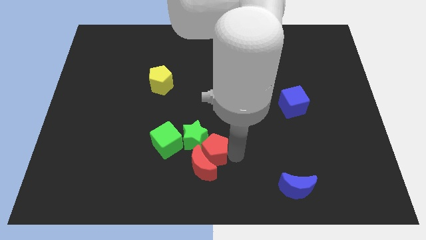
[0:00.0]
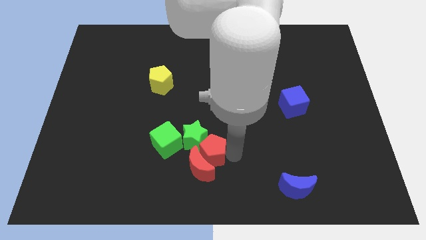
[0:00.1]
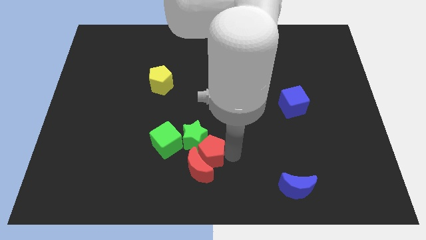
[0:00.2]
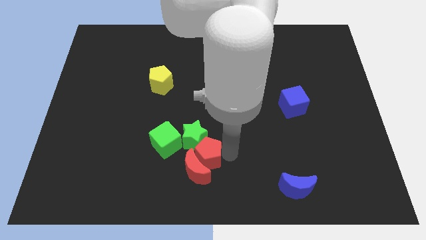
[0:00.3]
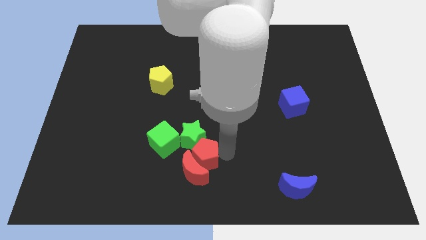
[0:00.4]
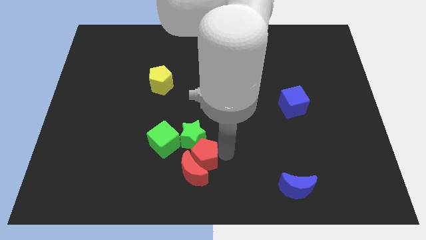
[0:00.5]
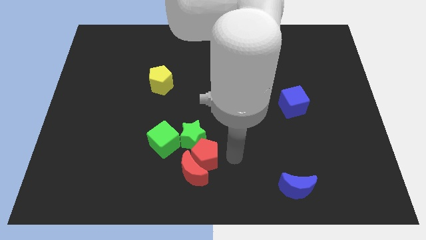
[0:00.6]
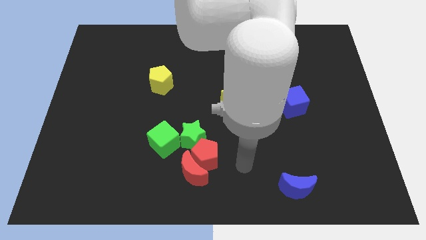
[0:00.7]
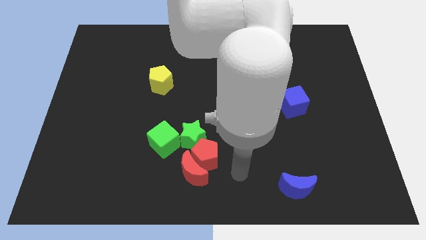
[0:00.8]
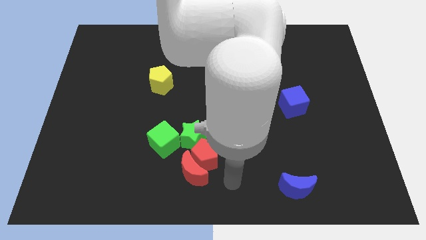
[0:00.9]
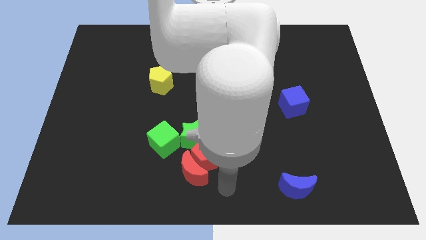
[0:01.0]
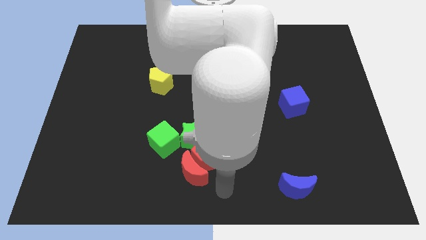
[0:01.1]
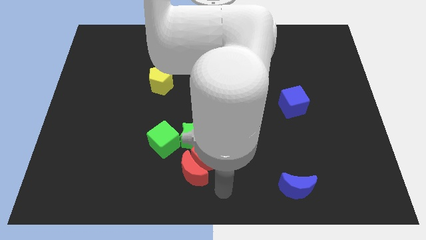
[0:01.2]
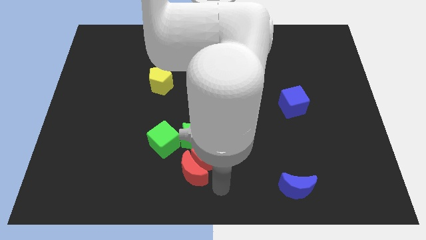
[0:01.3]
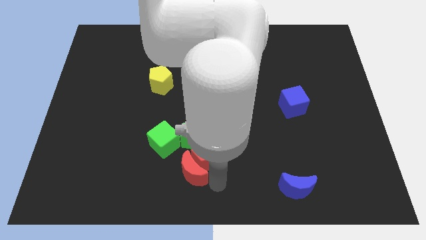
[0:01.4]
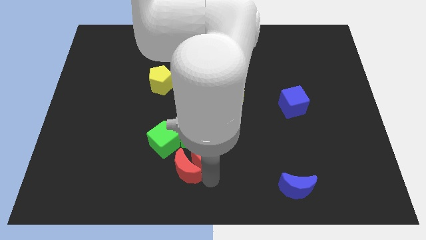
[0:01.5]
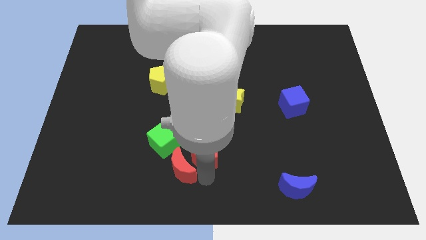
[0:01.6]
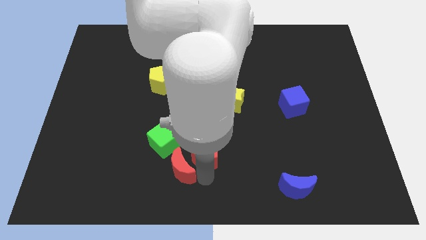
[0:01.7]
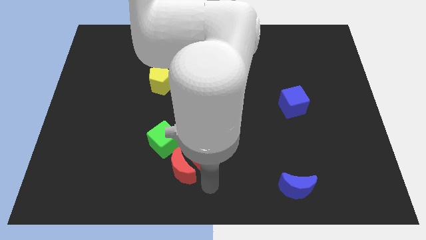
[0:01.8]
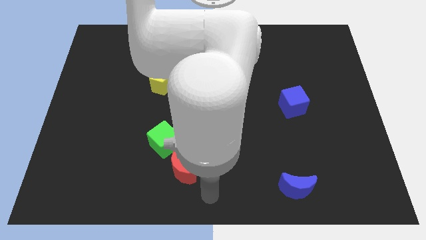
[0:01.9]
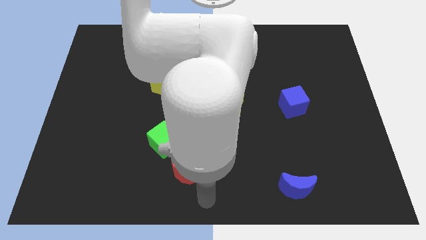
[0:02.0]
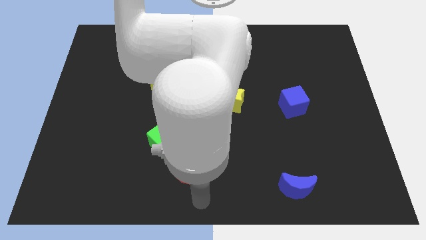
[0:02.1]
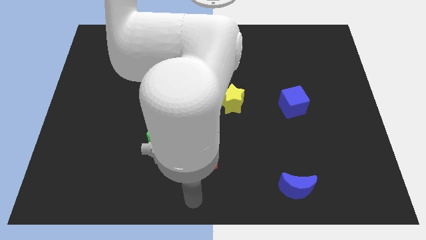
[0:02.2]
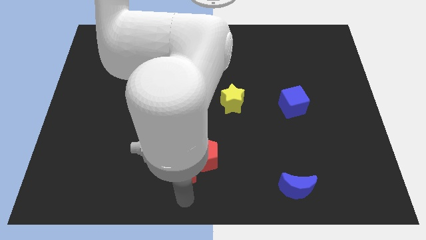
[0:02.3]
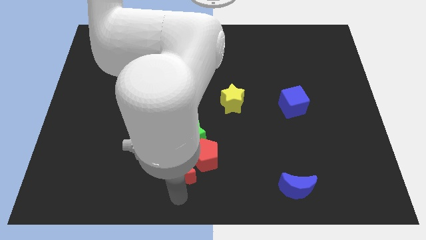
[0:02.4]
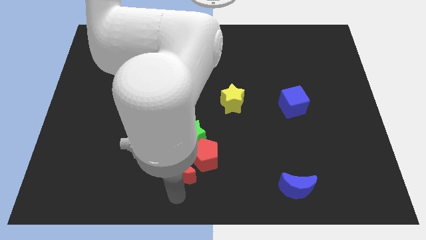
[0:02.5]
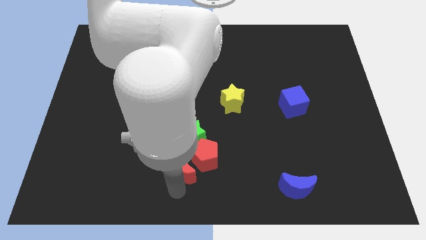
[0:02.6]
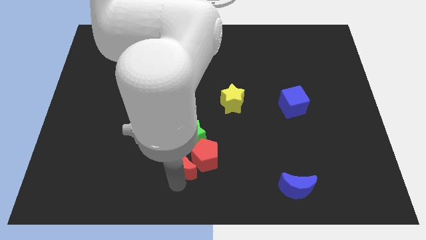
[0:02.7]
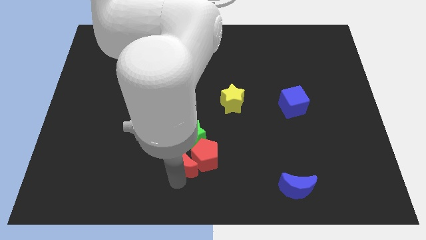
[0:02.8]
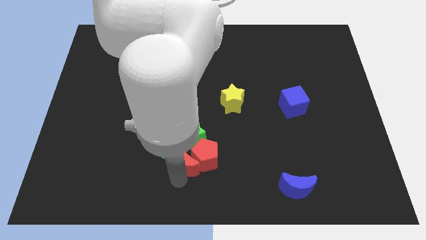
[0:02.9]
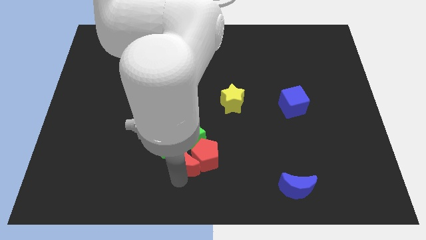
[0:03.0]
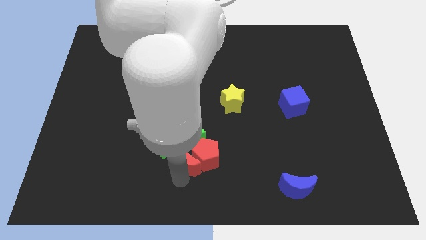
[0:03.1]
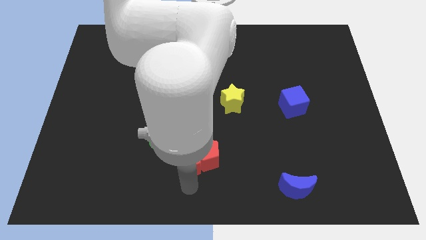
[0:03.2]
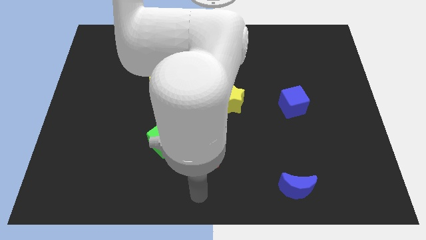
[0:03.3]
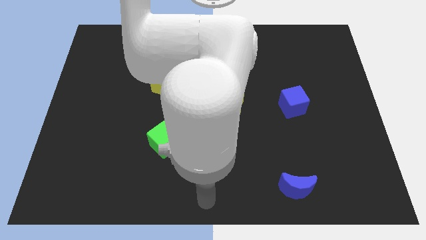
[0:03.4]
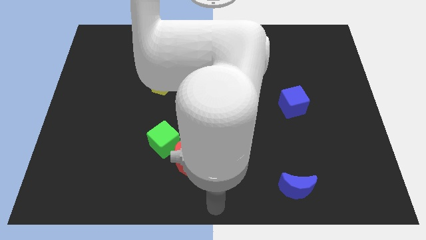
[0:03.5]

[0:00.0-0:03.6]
move your arm away from the red pentagon

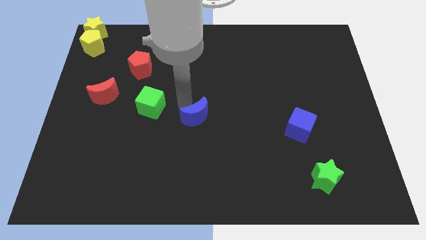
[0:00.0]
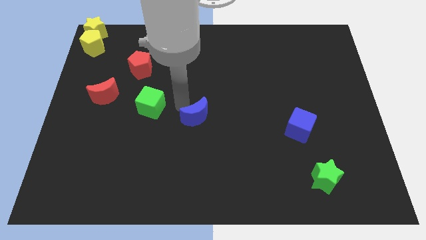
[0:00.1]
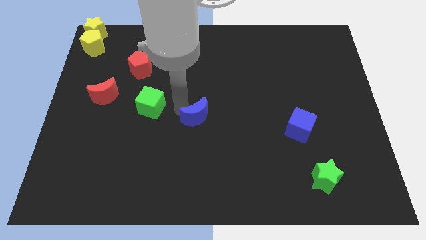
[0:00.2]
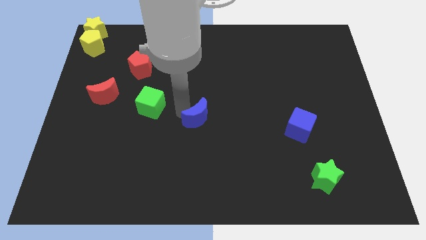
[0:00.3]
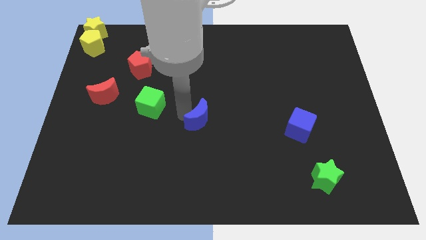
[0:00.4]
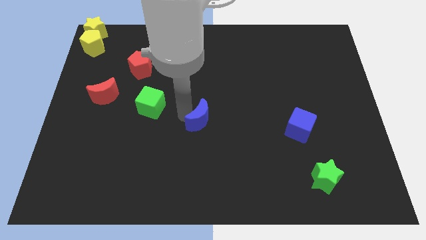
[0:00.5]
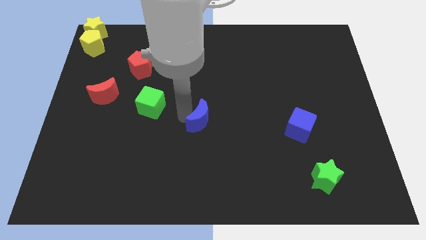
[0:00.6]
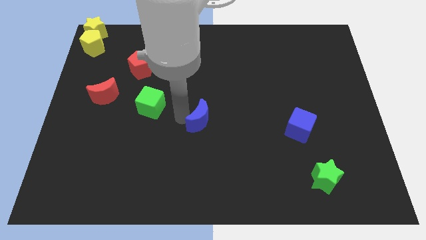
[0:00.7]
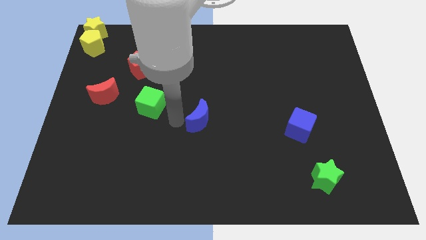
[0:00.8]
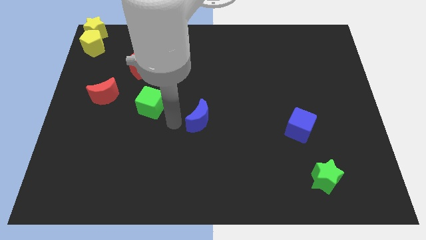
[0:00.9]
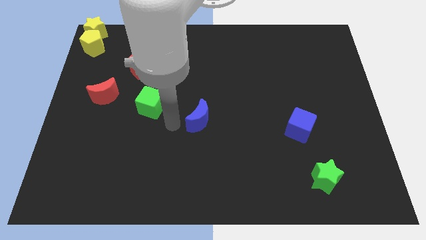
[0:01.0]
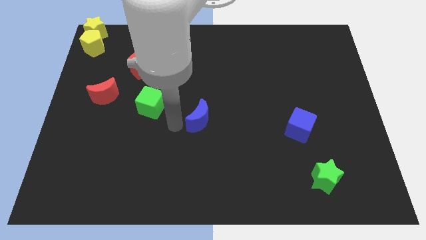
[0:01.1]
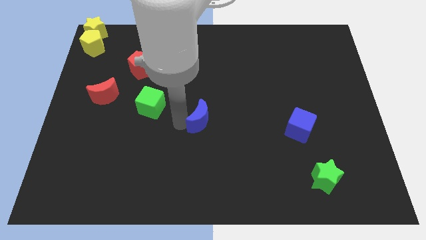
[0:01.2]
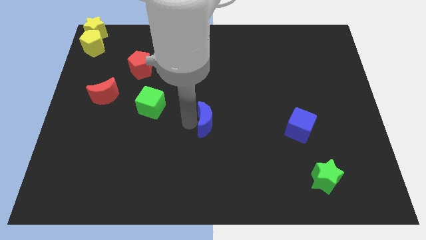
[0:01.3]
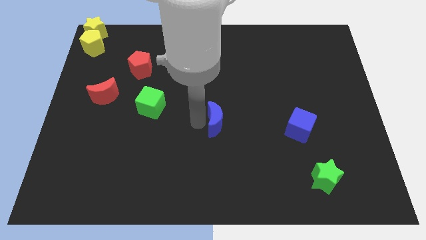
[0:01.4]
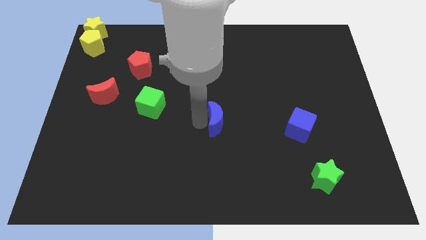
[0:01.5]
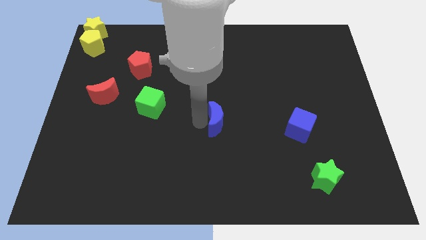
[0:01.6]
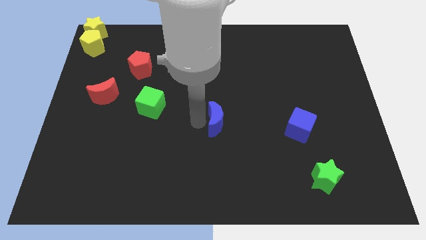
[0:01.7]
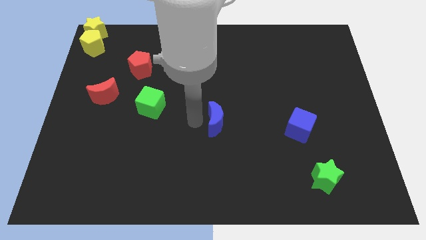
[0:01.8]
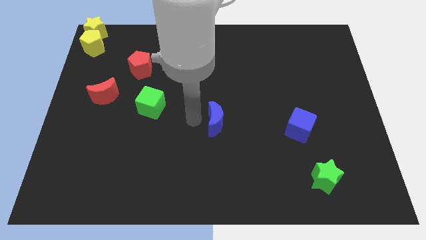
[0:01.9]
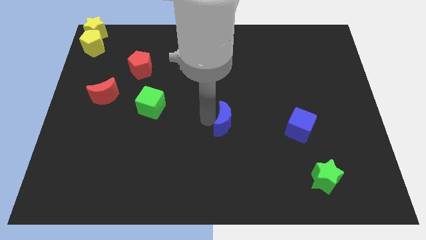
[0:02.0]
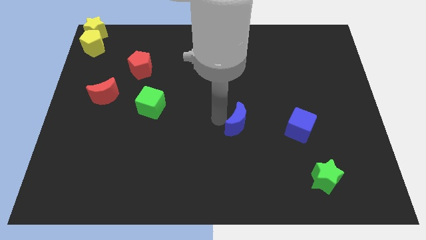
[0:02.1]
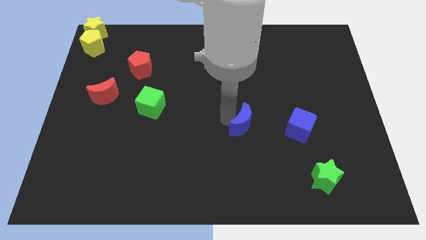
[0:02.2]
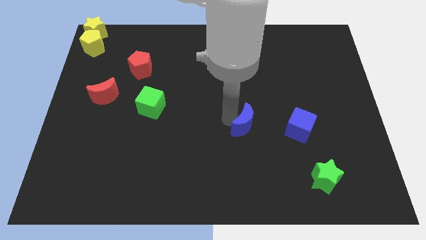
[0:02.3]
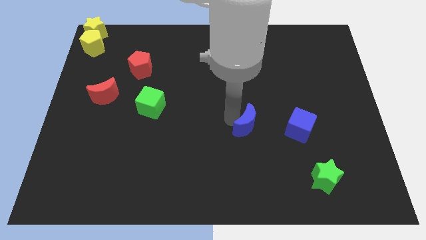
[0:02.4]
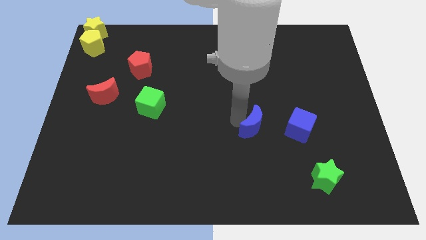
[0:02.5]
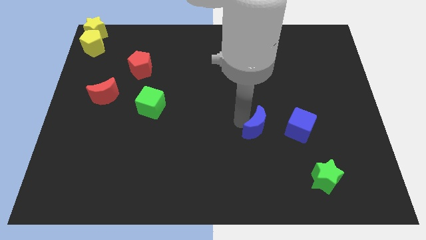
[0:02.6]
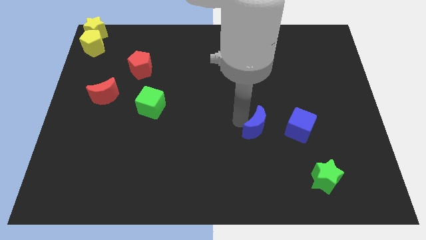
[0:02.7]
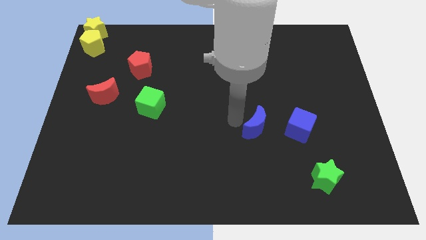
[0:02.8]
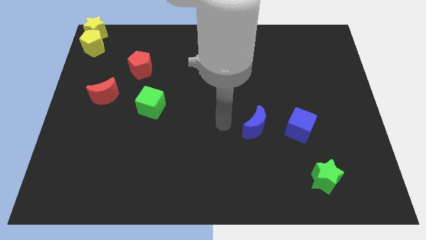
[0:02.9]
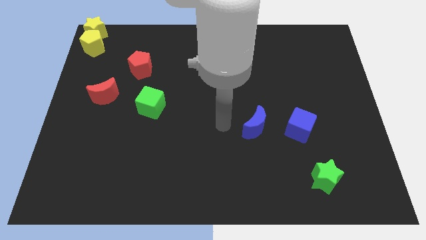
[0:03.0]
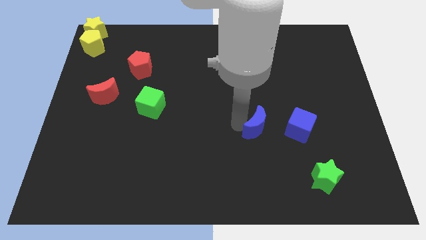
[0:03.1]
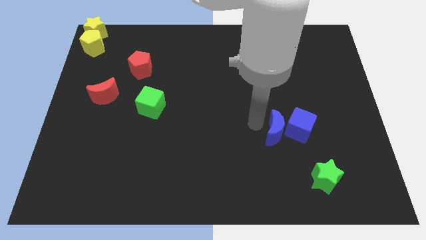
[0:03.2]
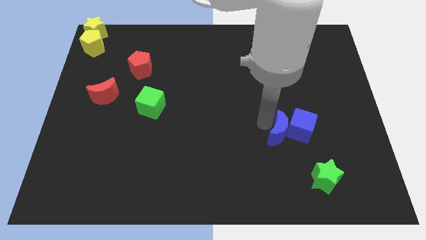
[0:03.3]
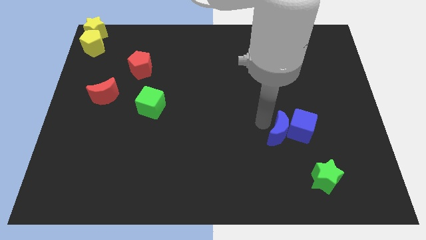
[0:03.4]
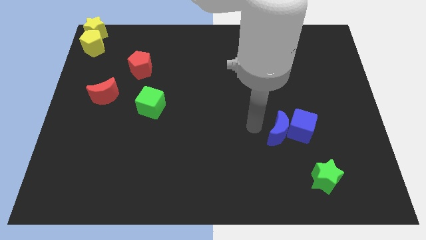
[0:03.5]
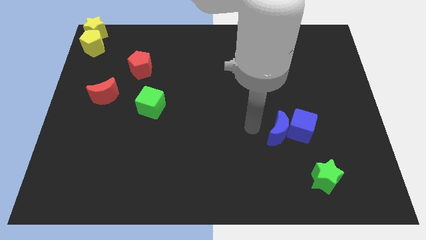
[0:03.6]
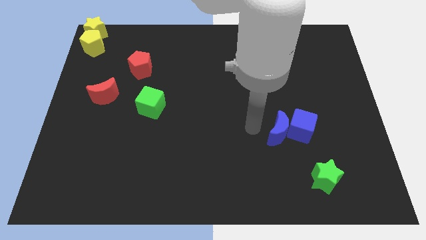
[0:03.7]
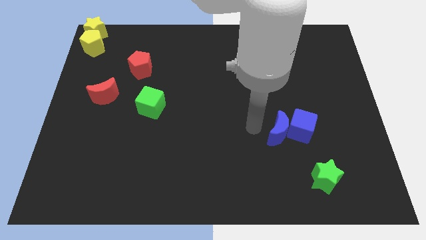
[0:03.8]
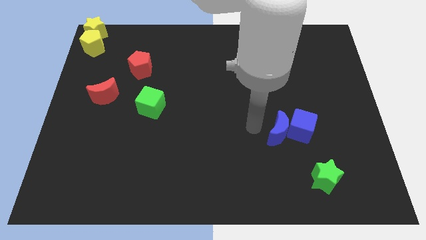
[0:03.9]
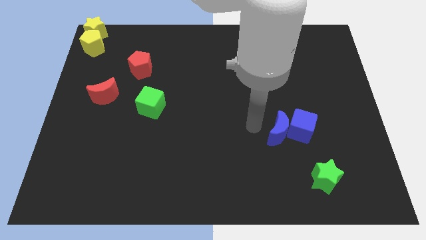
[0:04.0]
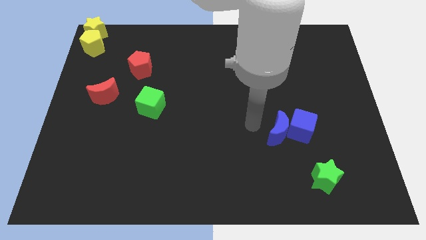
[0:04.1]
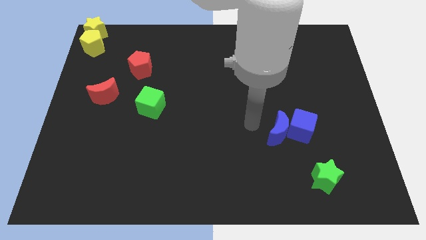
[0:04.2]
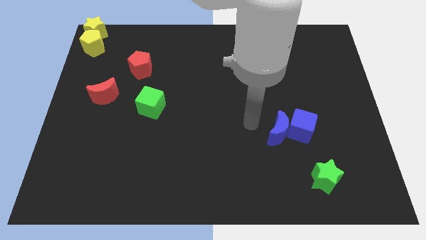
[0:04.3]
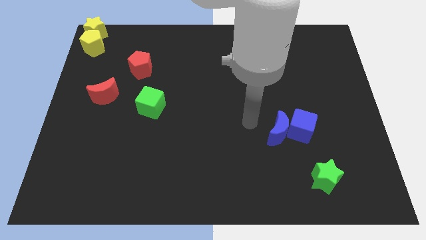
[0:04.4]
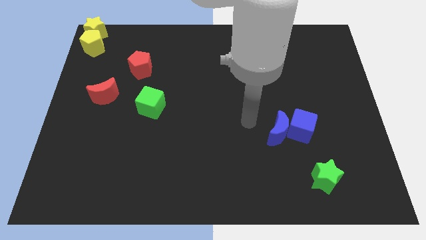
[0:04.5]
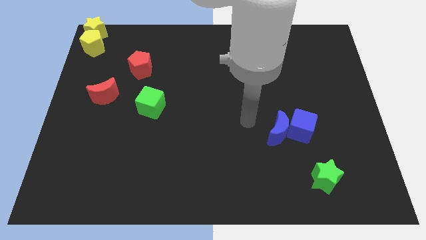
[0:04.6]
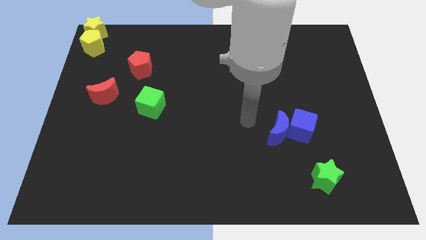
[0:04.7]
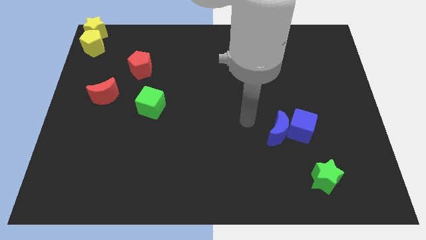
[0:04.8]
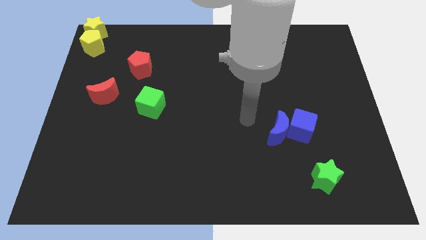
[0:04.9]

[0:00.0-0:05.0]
move the blue crescent into the blue cube

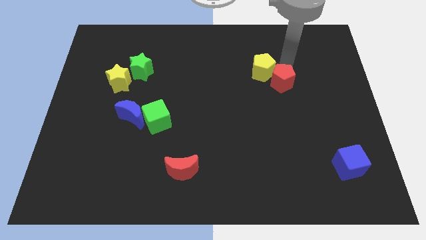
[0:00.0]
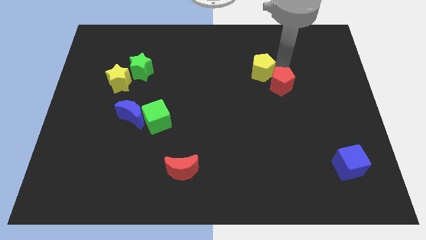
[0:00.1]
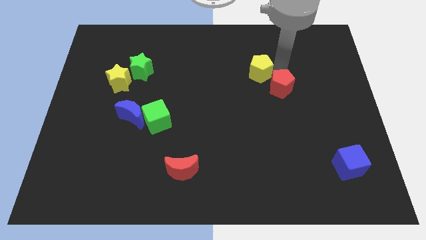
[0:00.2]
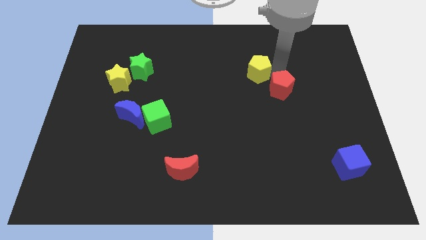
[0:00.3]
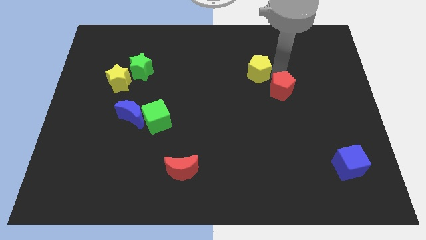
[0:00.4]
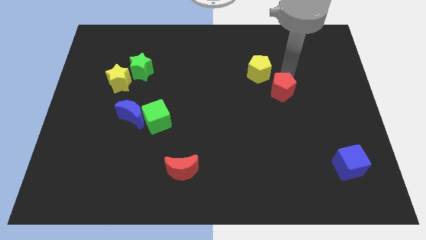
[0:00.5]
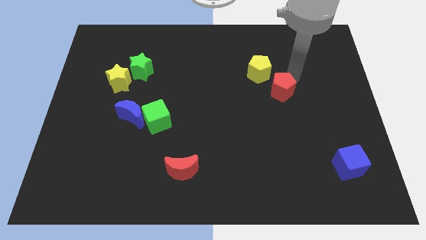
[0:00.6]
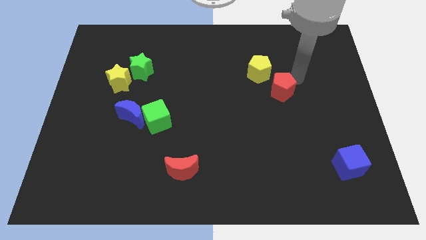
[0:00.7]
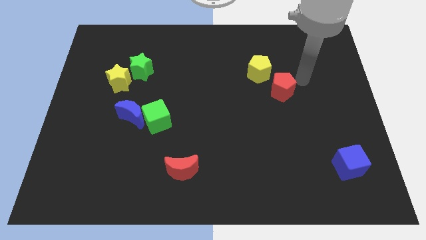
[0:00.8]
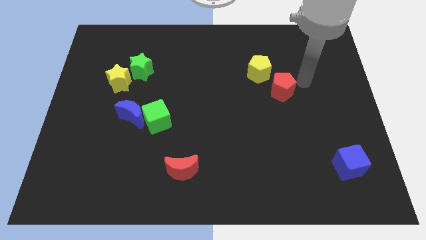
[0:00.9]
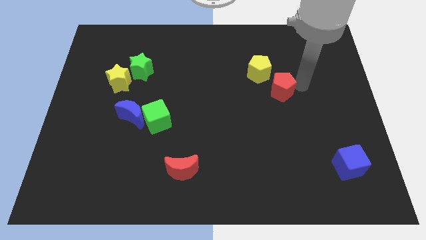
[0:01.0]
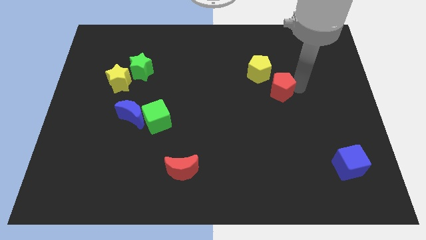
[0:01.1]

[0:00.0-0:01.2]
separate the red and yellow pentagons from each other
